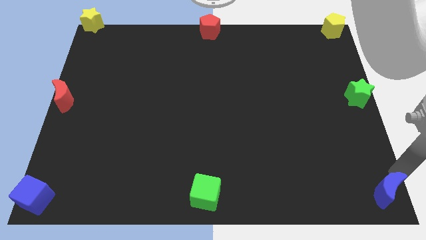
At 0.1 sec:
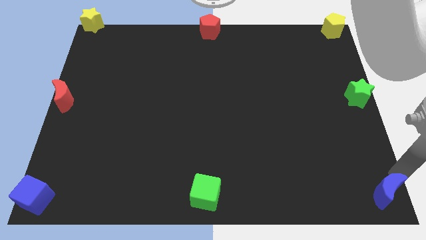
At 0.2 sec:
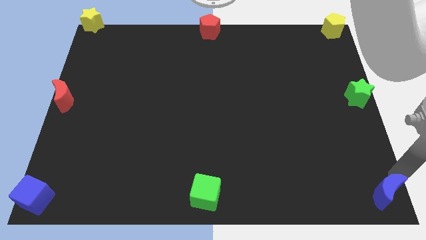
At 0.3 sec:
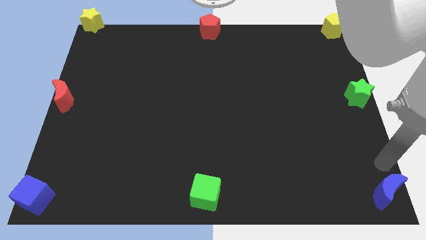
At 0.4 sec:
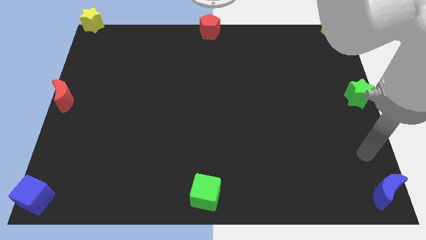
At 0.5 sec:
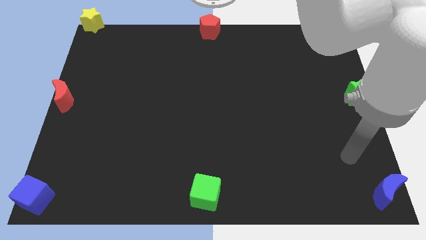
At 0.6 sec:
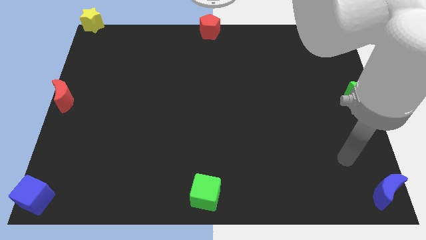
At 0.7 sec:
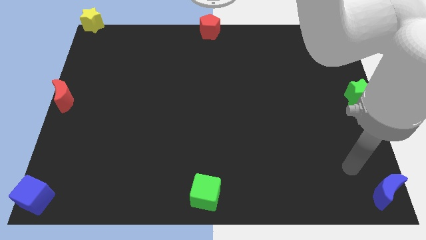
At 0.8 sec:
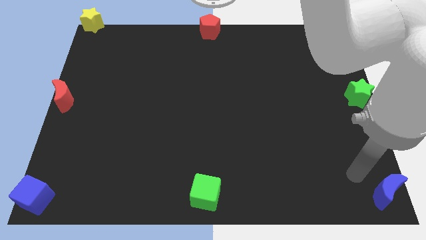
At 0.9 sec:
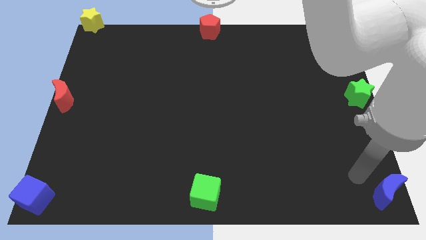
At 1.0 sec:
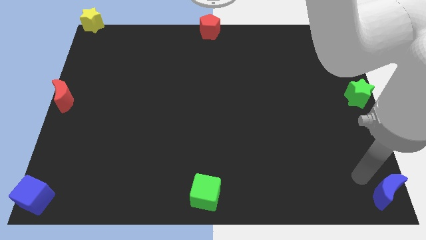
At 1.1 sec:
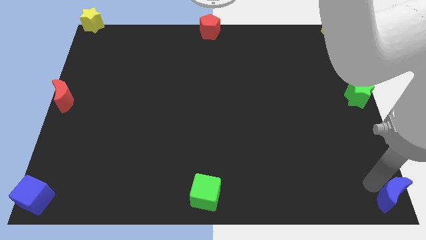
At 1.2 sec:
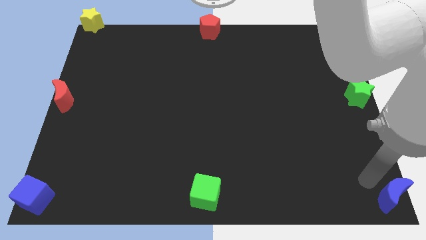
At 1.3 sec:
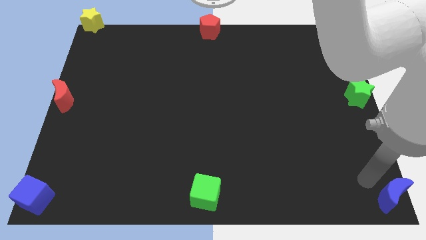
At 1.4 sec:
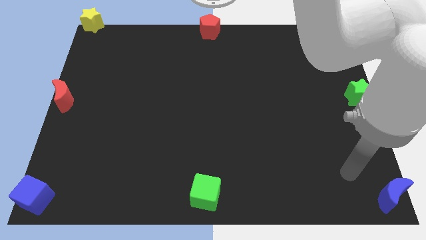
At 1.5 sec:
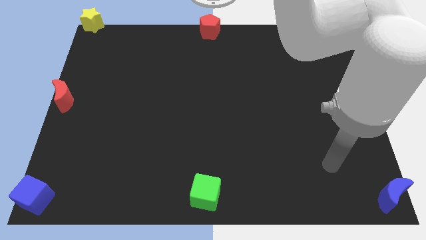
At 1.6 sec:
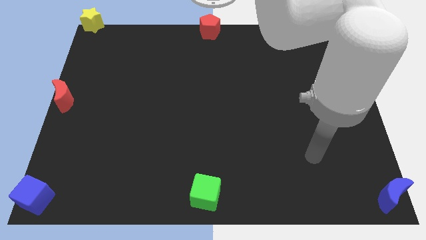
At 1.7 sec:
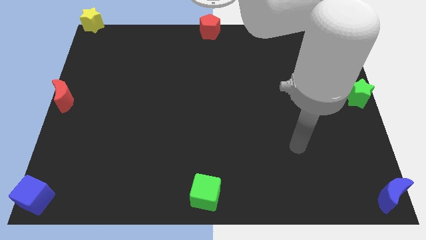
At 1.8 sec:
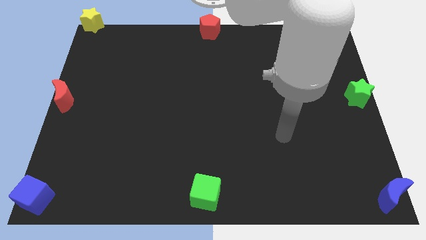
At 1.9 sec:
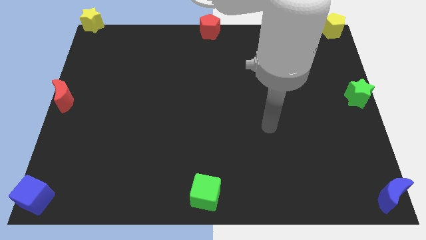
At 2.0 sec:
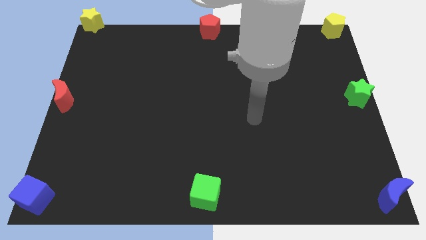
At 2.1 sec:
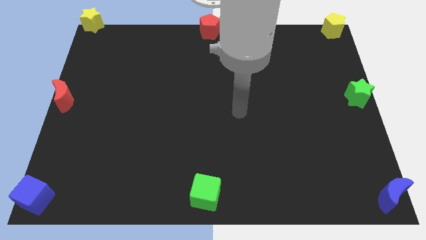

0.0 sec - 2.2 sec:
move your arm to the center of the board

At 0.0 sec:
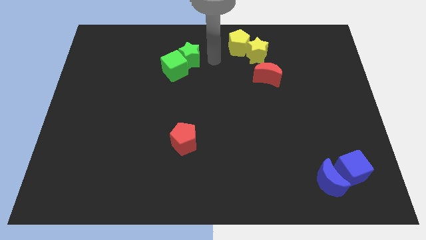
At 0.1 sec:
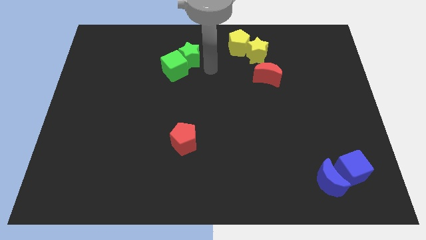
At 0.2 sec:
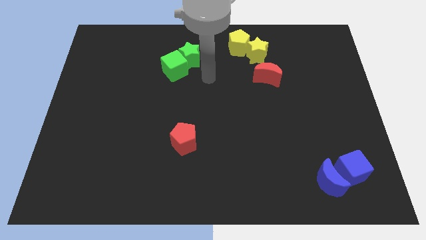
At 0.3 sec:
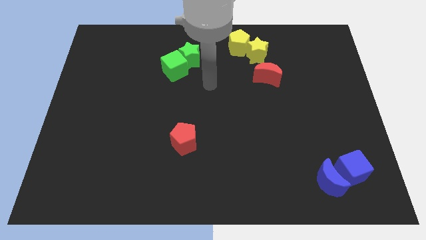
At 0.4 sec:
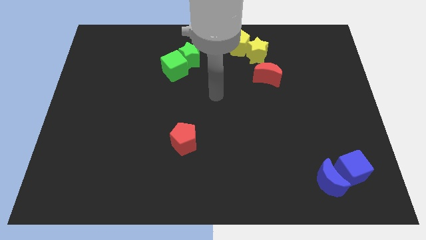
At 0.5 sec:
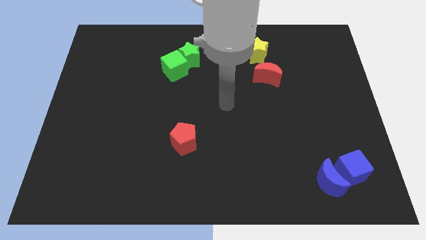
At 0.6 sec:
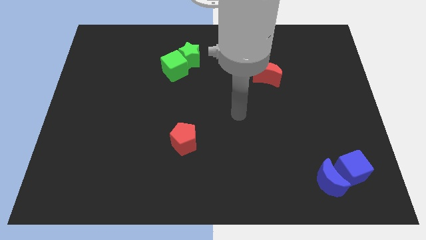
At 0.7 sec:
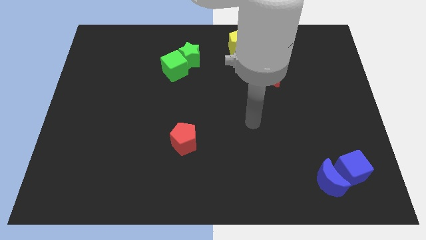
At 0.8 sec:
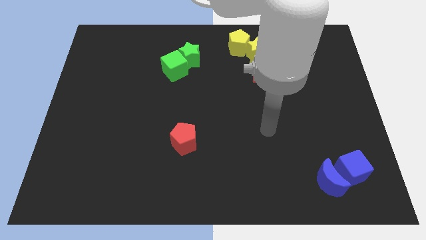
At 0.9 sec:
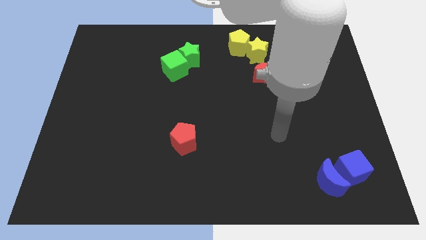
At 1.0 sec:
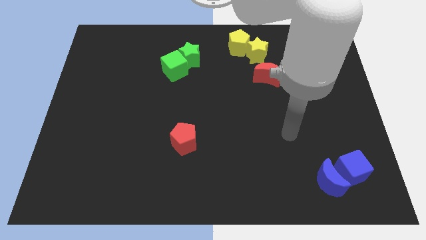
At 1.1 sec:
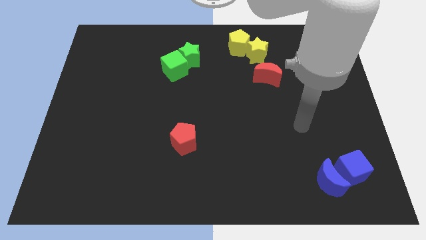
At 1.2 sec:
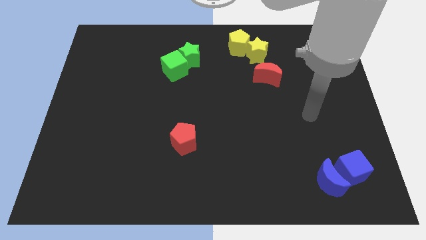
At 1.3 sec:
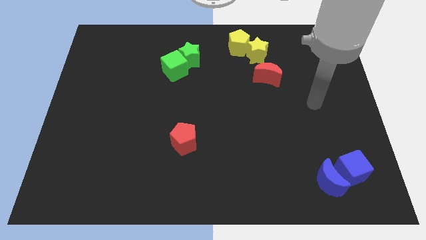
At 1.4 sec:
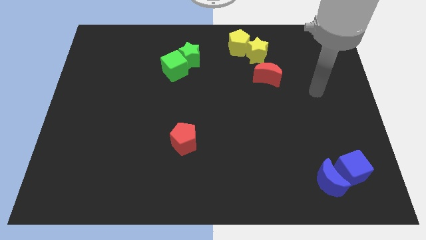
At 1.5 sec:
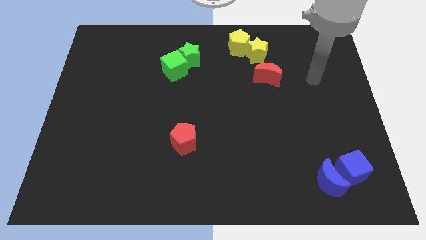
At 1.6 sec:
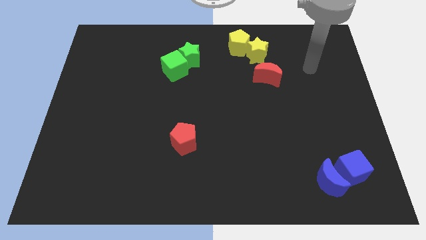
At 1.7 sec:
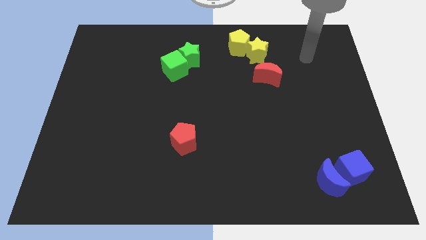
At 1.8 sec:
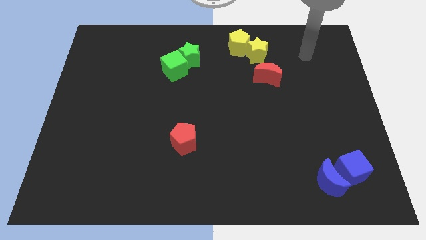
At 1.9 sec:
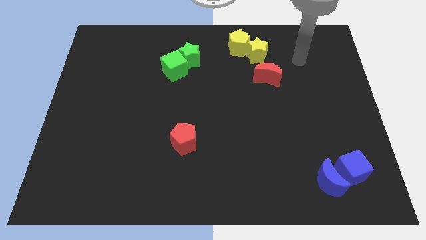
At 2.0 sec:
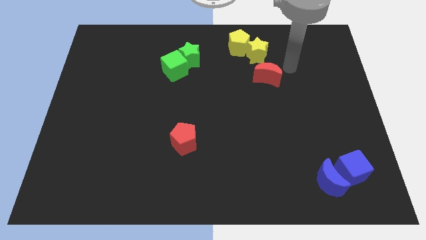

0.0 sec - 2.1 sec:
point your arm towards red pentagon

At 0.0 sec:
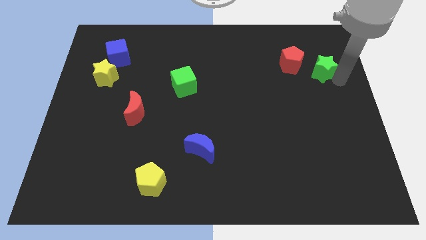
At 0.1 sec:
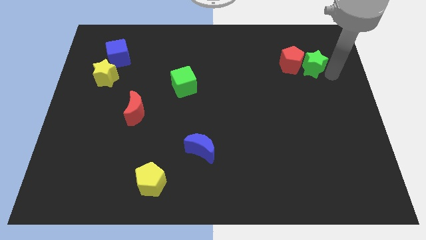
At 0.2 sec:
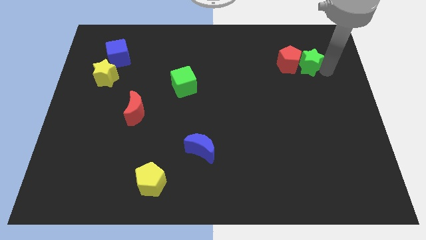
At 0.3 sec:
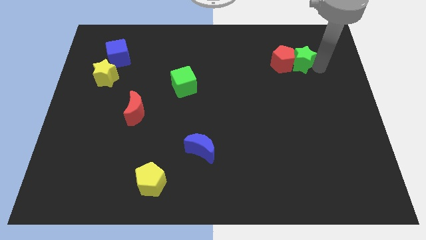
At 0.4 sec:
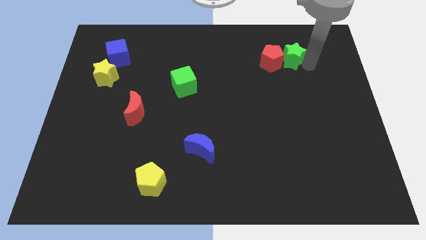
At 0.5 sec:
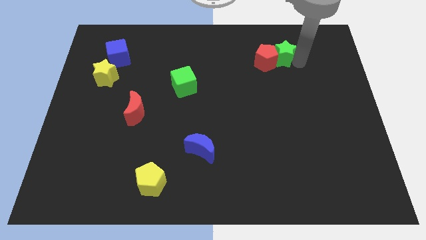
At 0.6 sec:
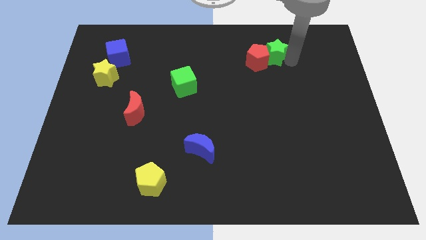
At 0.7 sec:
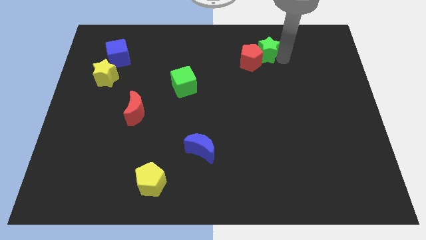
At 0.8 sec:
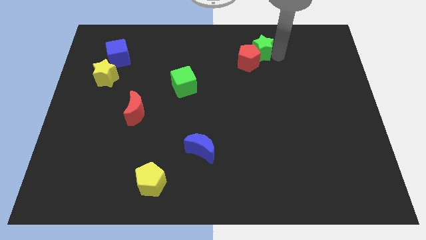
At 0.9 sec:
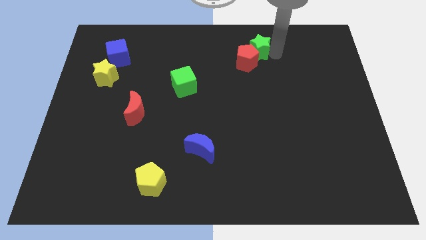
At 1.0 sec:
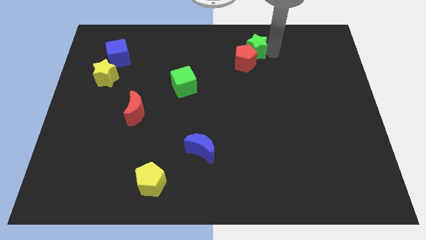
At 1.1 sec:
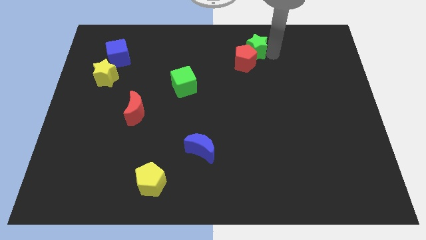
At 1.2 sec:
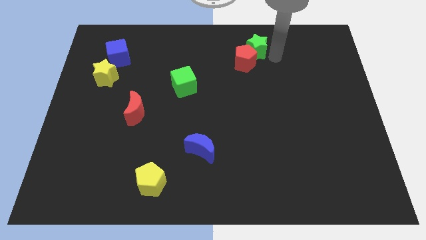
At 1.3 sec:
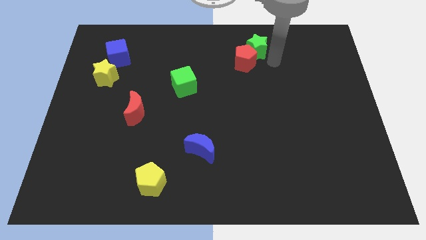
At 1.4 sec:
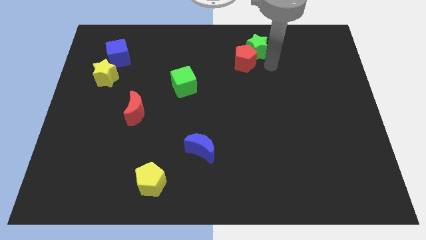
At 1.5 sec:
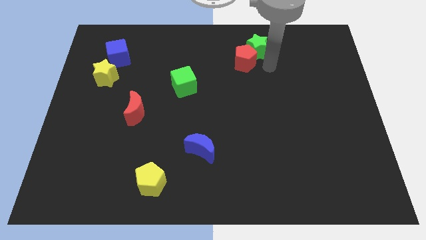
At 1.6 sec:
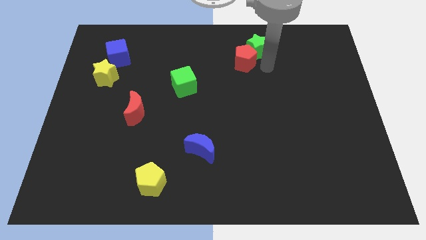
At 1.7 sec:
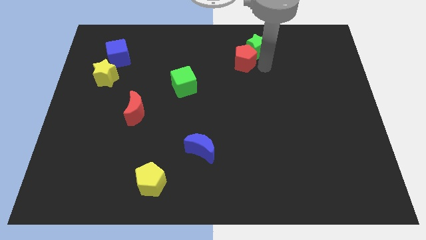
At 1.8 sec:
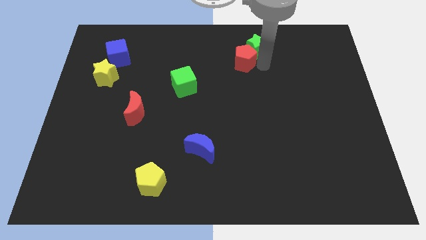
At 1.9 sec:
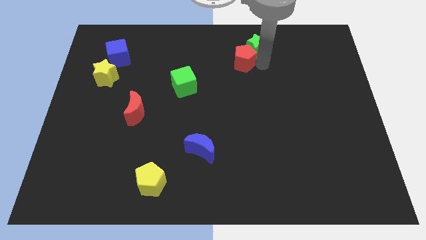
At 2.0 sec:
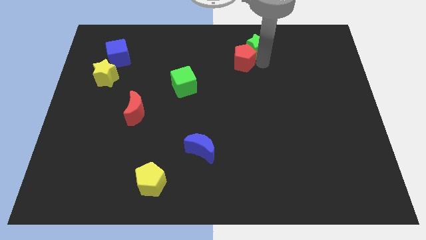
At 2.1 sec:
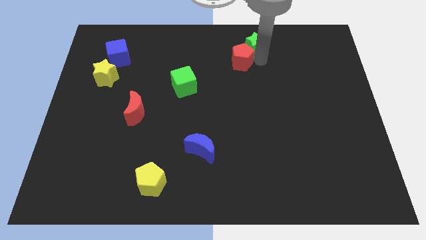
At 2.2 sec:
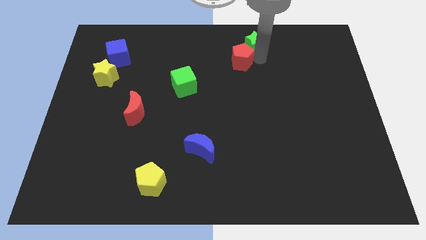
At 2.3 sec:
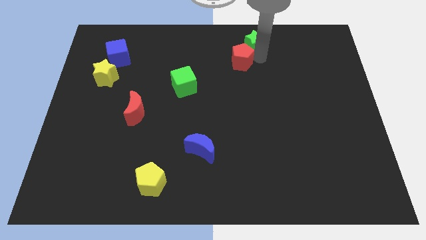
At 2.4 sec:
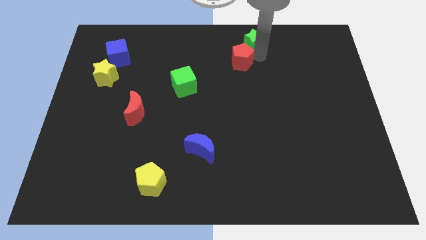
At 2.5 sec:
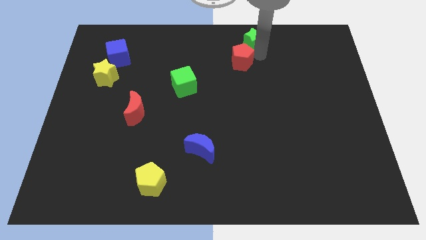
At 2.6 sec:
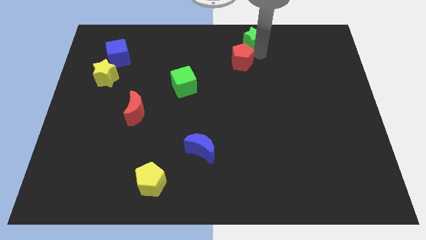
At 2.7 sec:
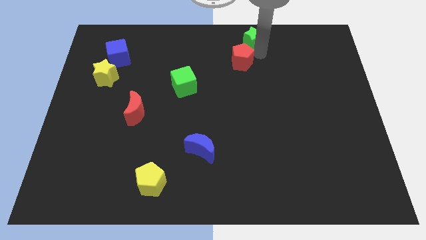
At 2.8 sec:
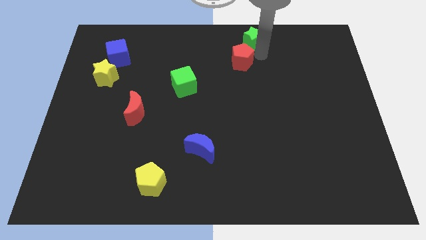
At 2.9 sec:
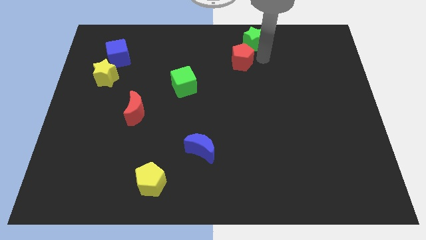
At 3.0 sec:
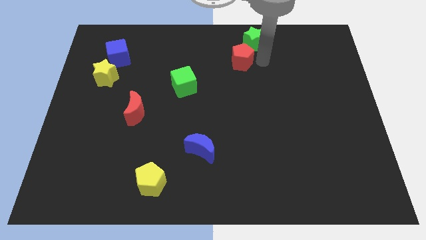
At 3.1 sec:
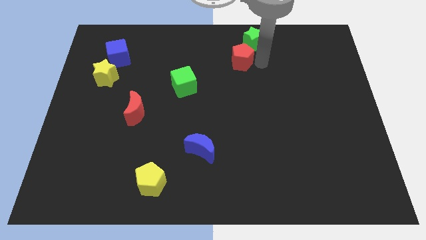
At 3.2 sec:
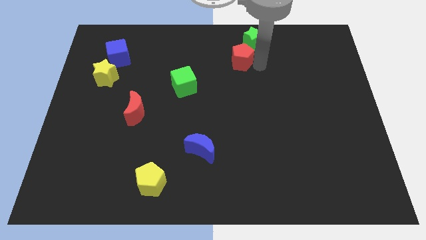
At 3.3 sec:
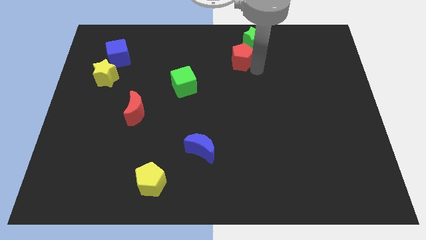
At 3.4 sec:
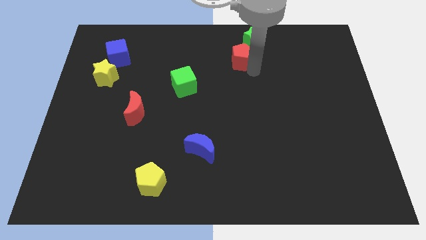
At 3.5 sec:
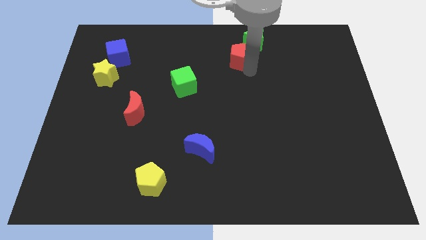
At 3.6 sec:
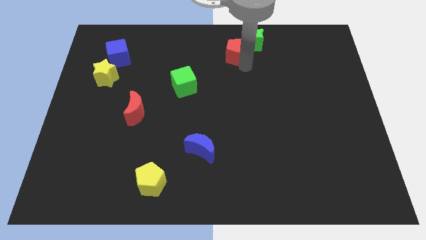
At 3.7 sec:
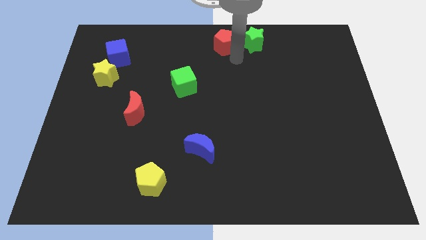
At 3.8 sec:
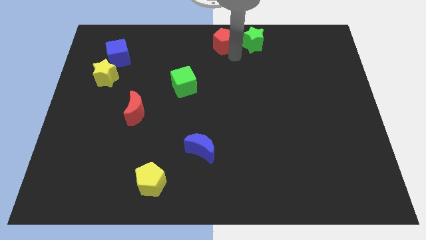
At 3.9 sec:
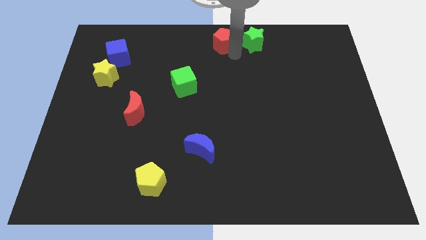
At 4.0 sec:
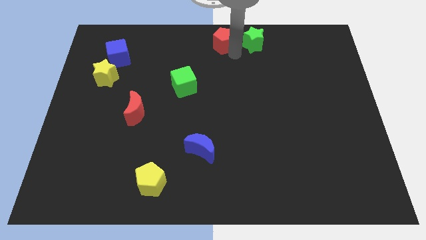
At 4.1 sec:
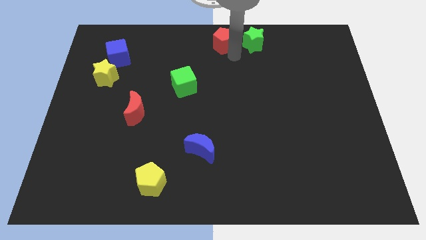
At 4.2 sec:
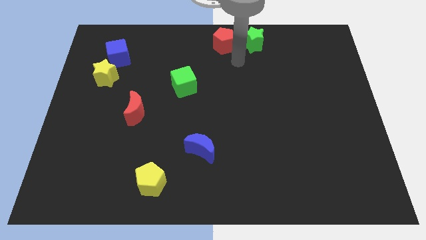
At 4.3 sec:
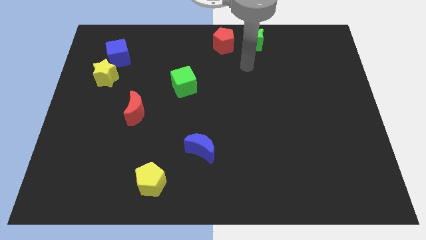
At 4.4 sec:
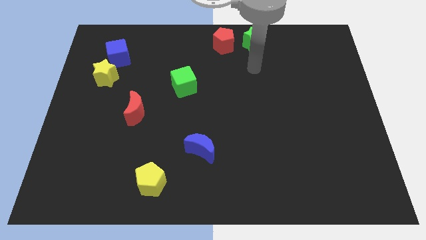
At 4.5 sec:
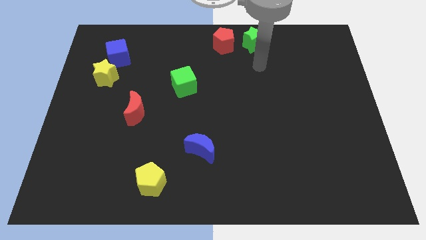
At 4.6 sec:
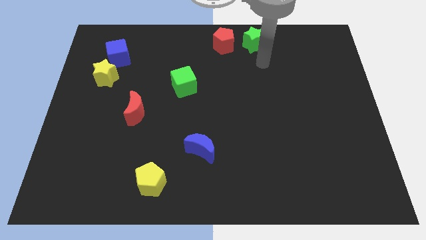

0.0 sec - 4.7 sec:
push the red moon to the top center
